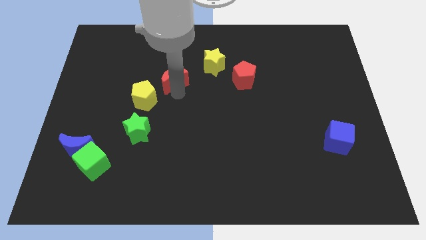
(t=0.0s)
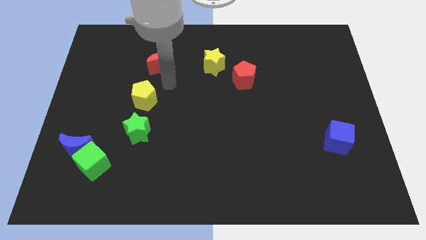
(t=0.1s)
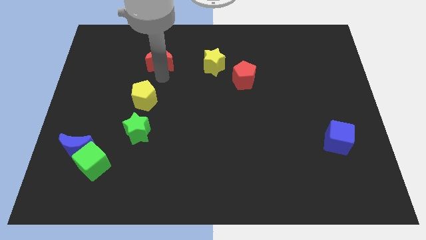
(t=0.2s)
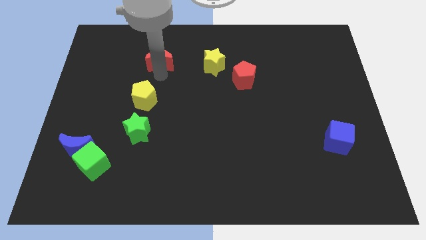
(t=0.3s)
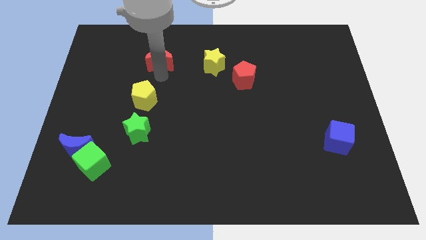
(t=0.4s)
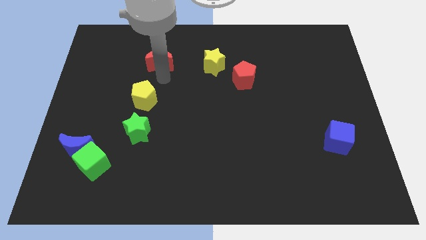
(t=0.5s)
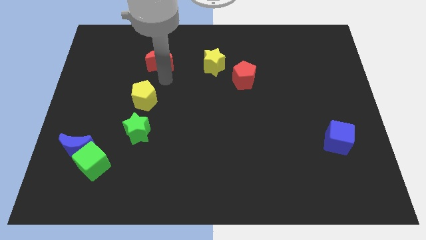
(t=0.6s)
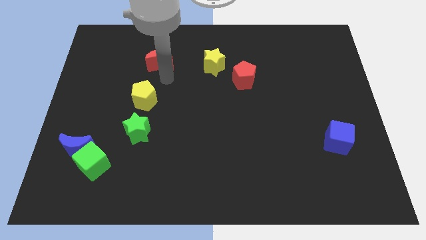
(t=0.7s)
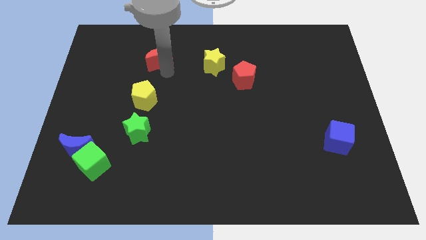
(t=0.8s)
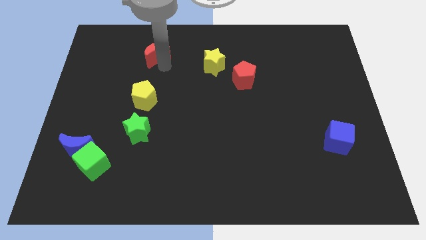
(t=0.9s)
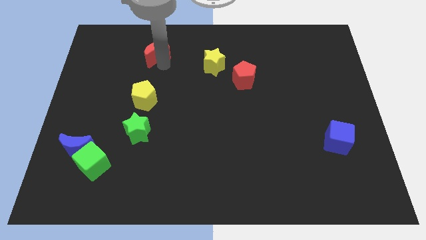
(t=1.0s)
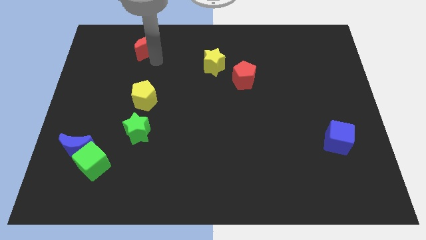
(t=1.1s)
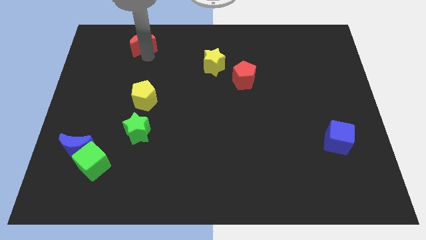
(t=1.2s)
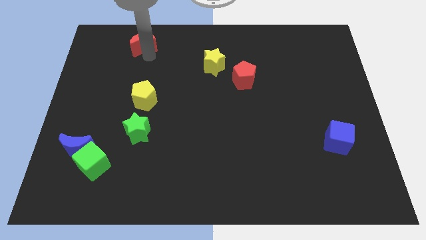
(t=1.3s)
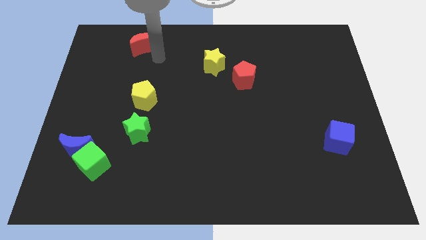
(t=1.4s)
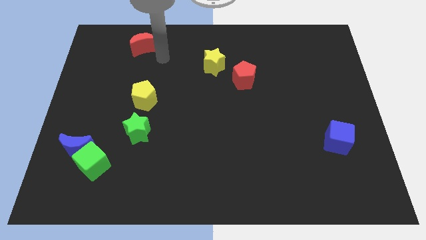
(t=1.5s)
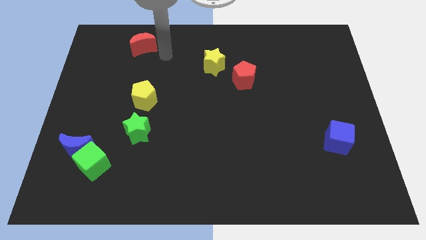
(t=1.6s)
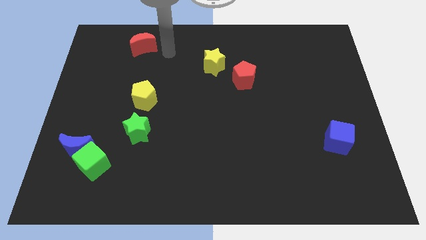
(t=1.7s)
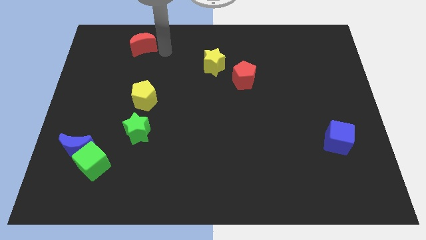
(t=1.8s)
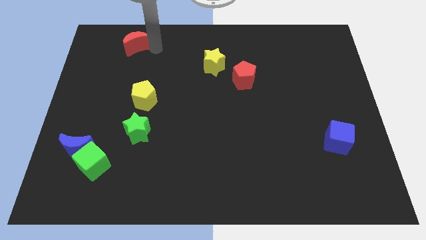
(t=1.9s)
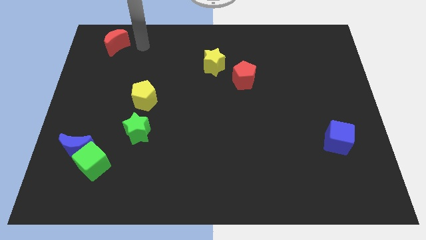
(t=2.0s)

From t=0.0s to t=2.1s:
push the red crescent slightly upwards

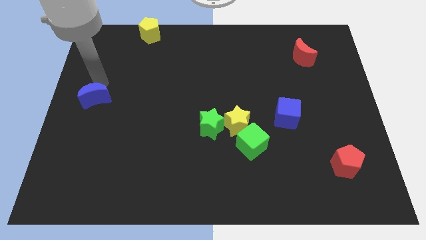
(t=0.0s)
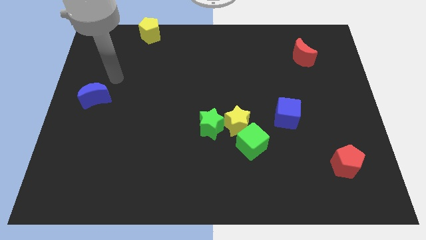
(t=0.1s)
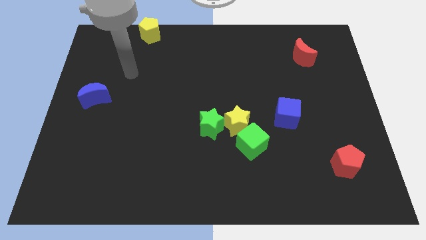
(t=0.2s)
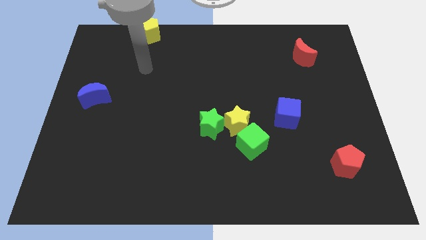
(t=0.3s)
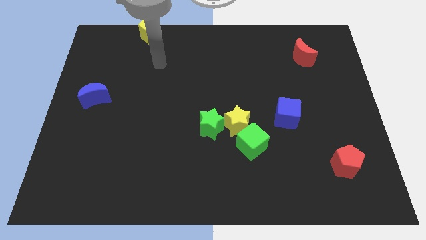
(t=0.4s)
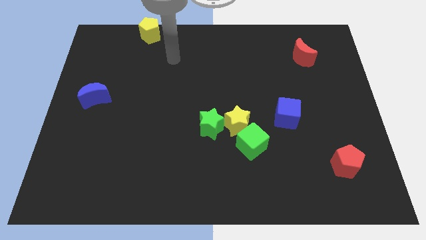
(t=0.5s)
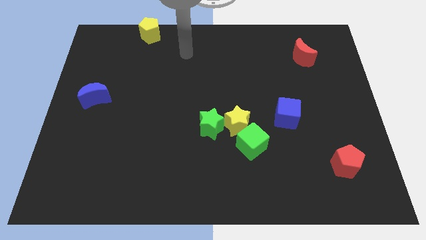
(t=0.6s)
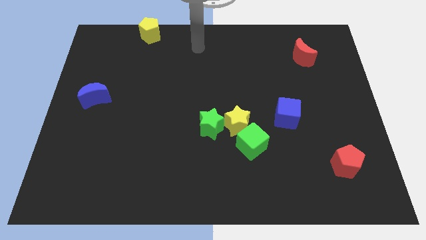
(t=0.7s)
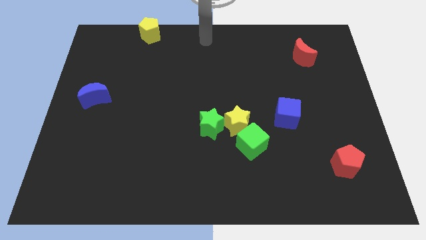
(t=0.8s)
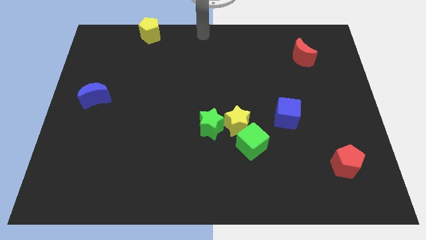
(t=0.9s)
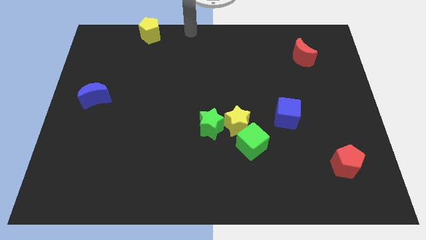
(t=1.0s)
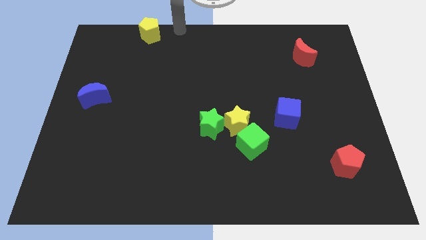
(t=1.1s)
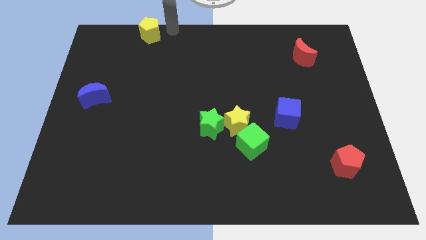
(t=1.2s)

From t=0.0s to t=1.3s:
move your arm away from the blue moon

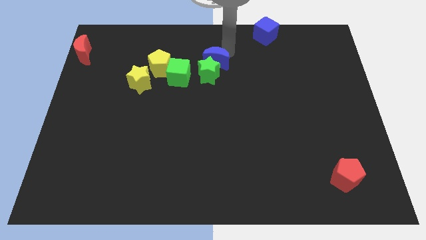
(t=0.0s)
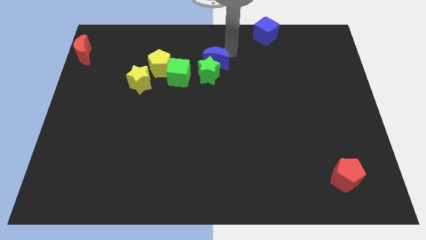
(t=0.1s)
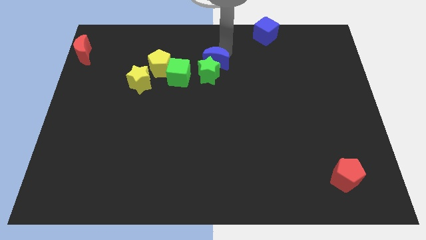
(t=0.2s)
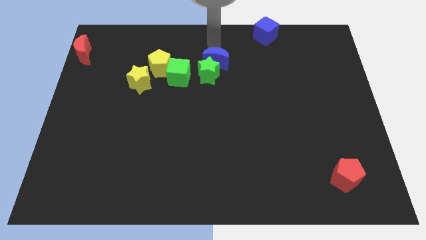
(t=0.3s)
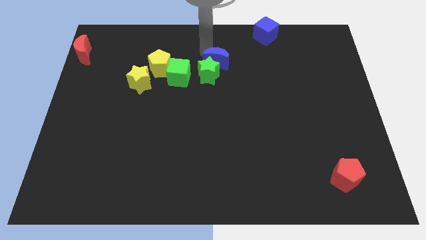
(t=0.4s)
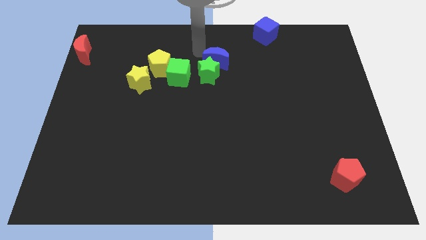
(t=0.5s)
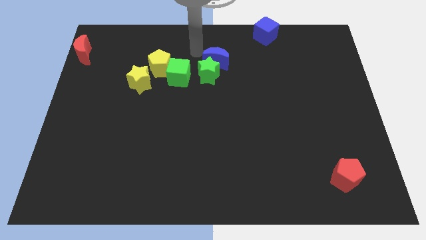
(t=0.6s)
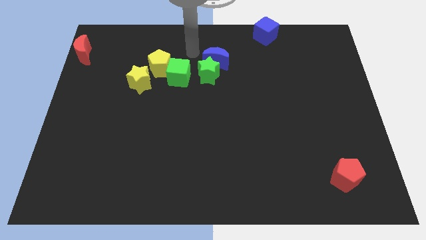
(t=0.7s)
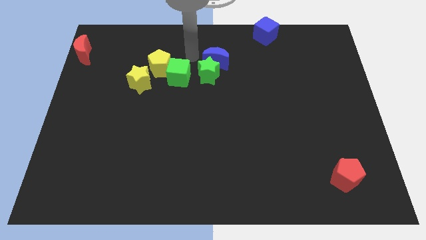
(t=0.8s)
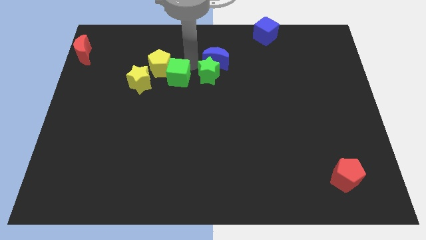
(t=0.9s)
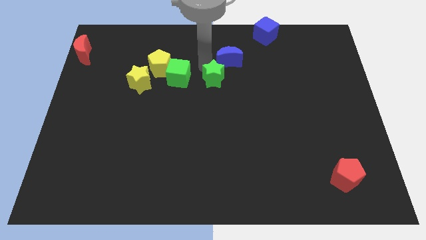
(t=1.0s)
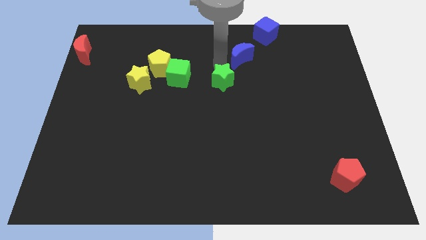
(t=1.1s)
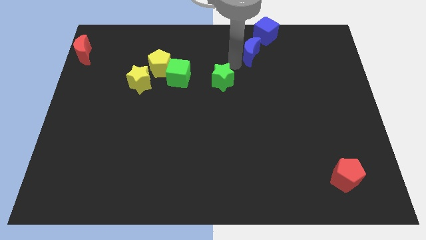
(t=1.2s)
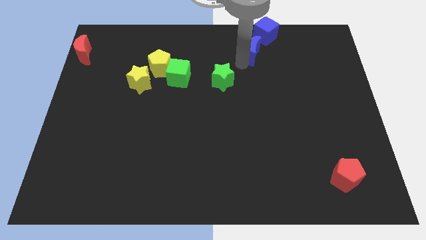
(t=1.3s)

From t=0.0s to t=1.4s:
push the blue crescent towards the blue cube

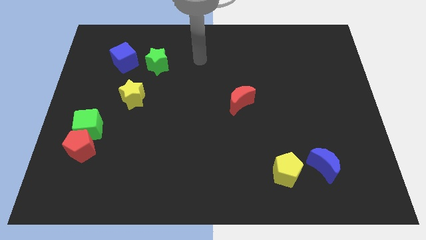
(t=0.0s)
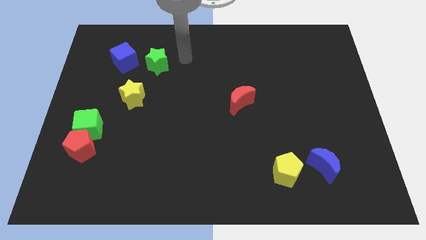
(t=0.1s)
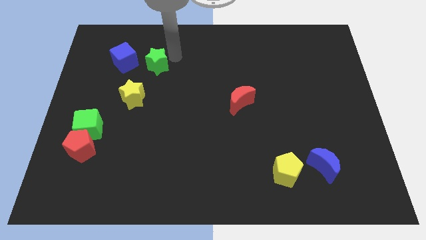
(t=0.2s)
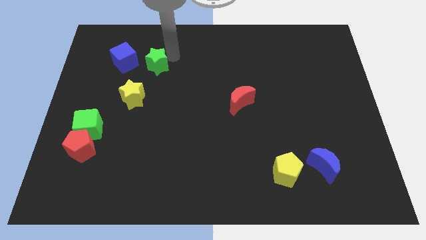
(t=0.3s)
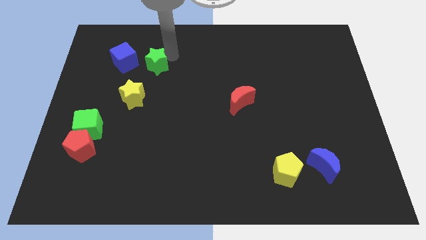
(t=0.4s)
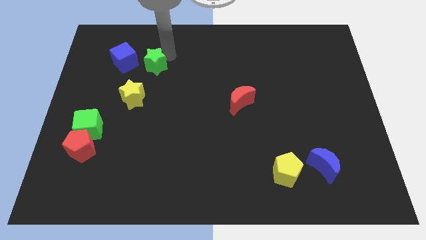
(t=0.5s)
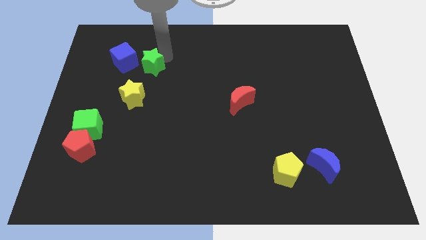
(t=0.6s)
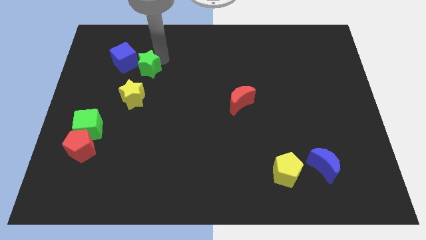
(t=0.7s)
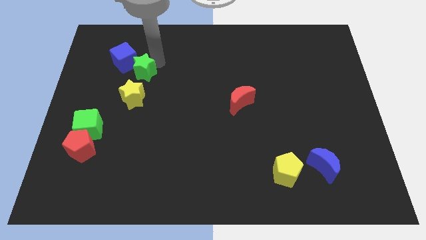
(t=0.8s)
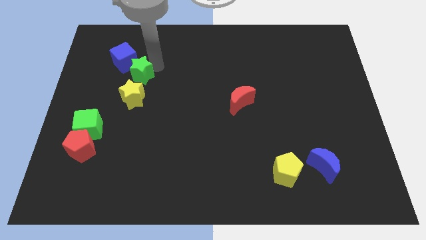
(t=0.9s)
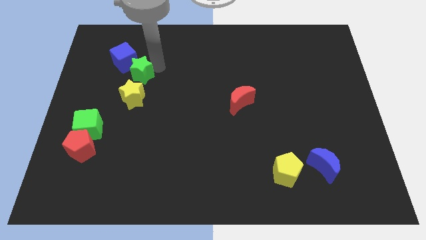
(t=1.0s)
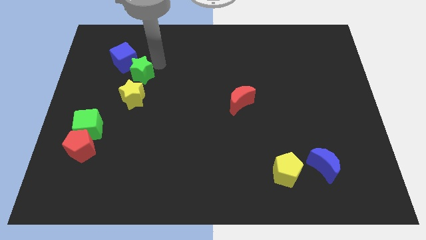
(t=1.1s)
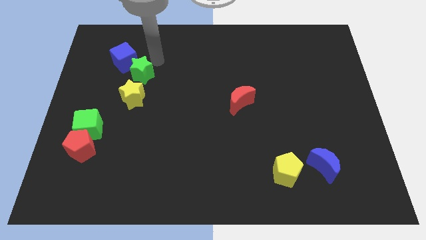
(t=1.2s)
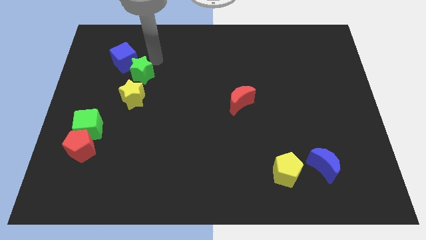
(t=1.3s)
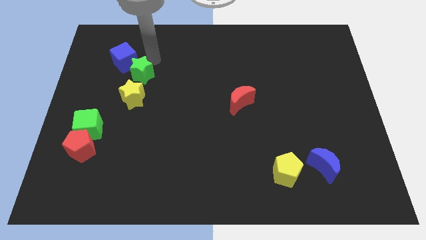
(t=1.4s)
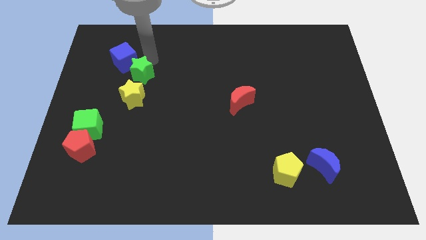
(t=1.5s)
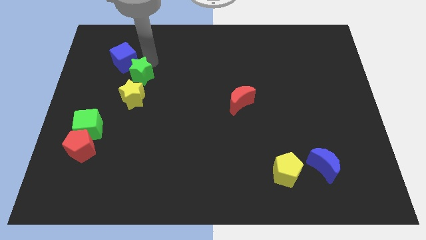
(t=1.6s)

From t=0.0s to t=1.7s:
move the green star towards the yellow star

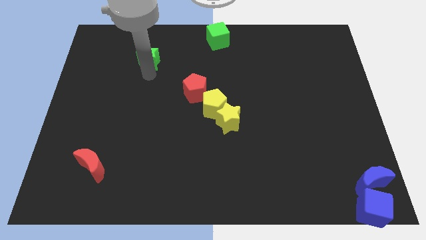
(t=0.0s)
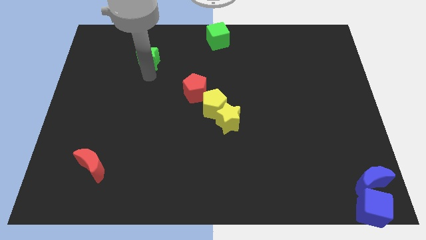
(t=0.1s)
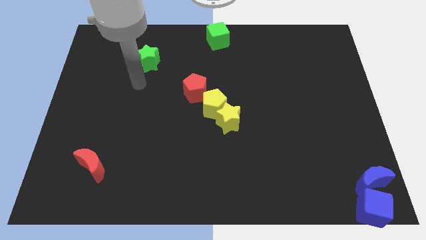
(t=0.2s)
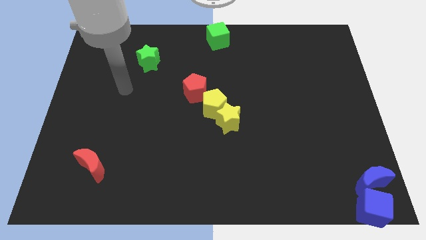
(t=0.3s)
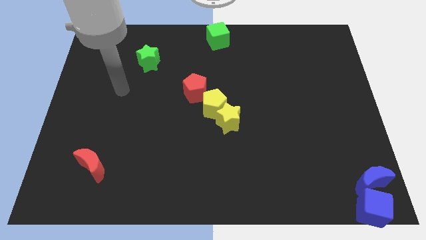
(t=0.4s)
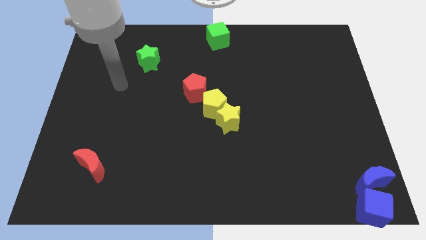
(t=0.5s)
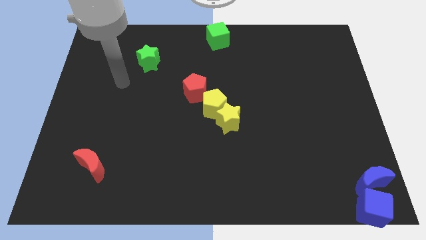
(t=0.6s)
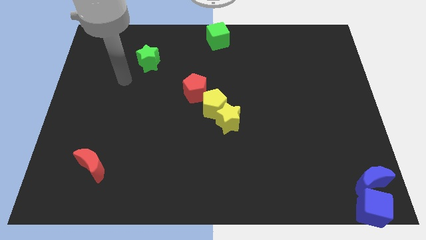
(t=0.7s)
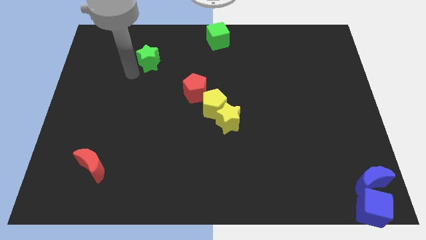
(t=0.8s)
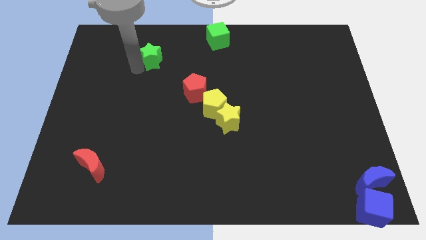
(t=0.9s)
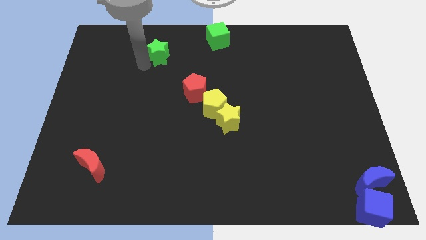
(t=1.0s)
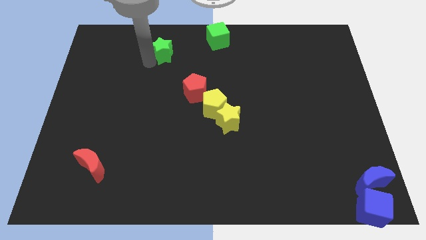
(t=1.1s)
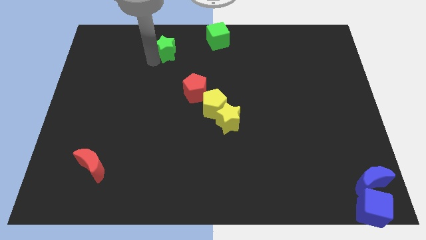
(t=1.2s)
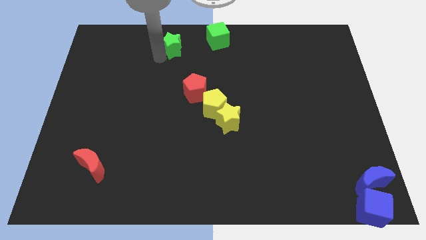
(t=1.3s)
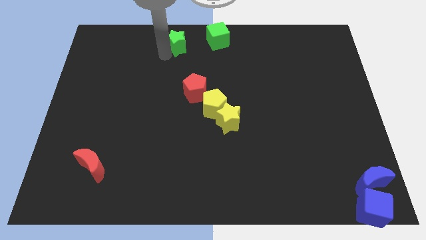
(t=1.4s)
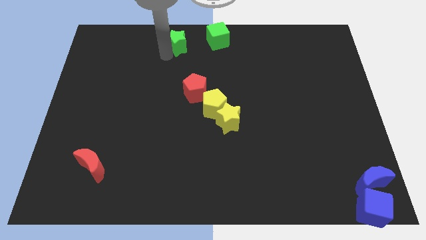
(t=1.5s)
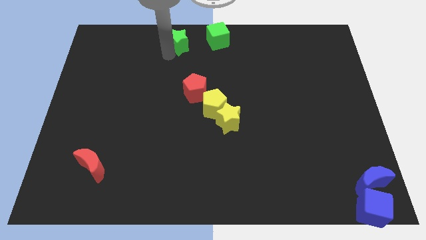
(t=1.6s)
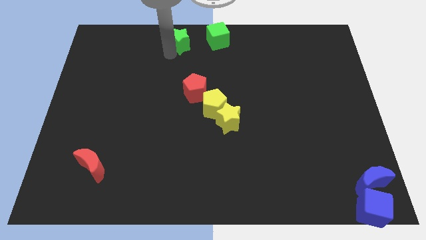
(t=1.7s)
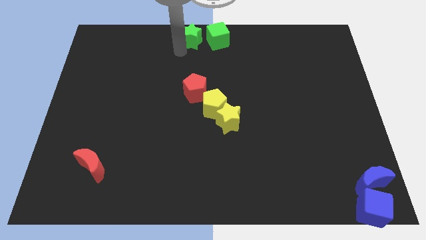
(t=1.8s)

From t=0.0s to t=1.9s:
move the green star left to the green cube

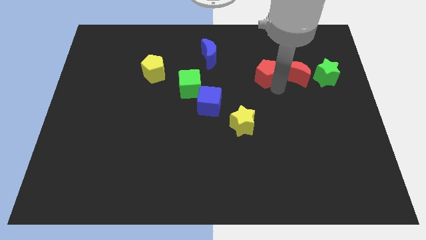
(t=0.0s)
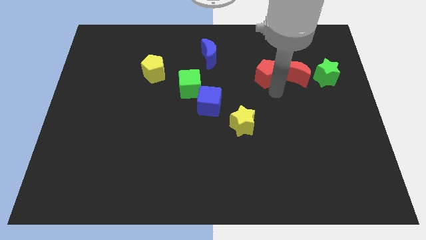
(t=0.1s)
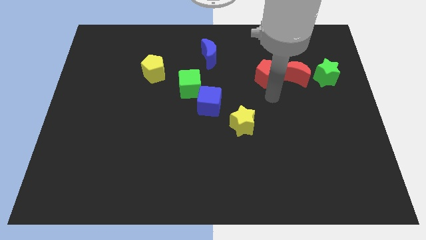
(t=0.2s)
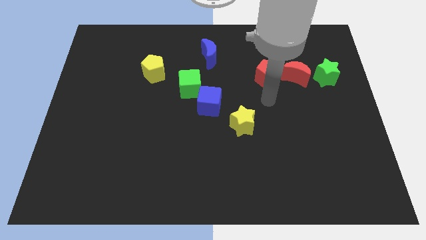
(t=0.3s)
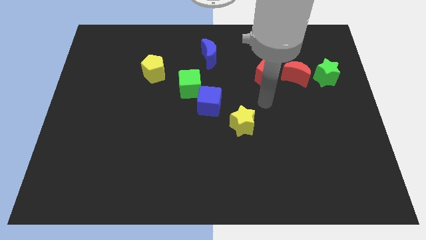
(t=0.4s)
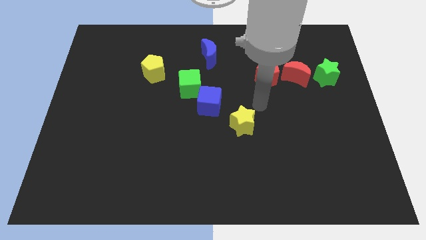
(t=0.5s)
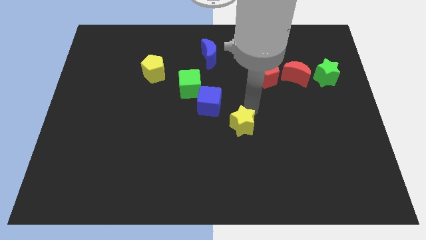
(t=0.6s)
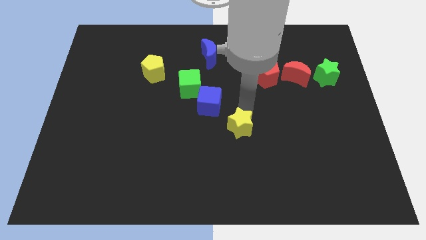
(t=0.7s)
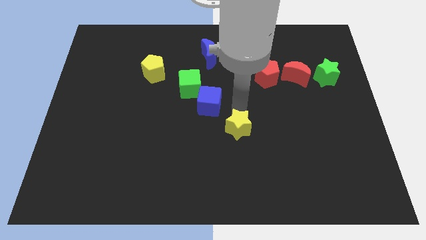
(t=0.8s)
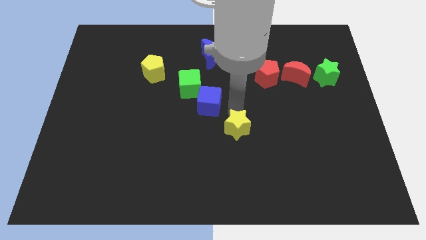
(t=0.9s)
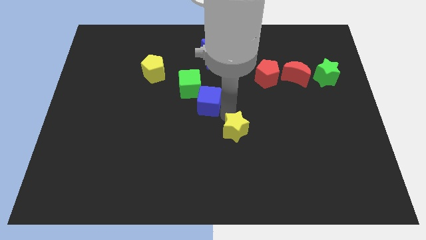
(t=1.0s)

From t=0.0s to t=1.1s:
slightly move the yellow star towards the bottom side of the board
